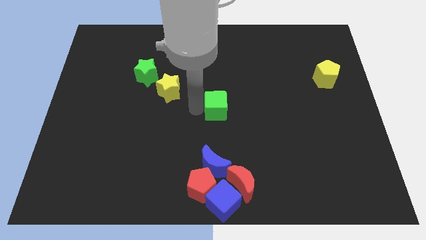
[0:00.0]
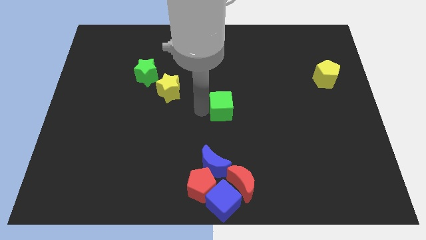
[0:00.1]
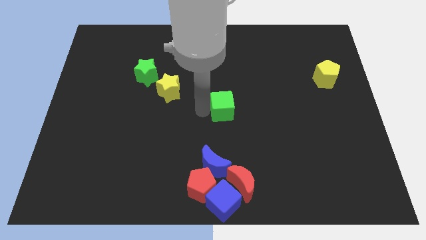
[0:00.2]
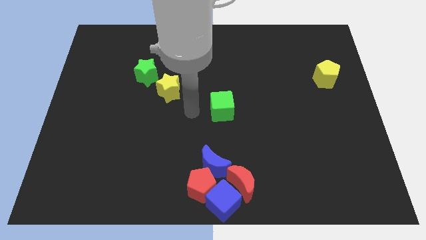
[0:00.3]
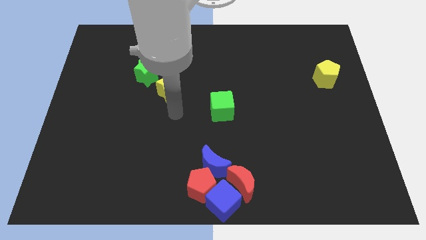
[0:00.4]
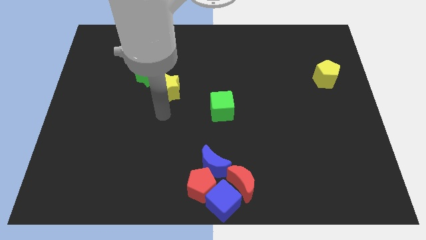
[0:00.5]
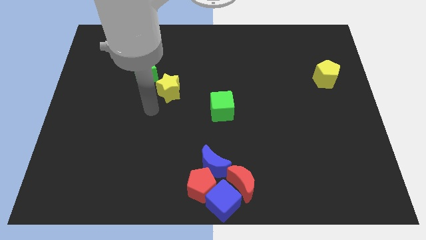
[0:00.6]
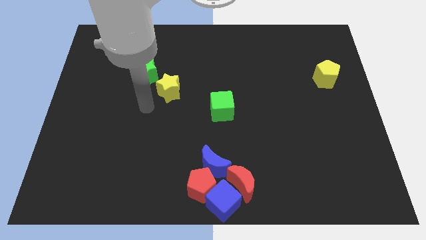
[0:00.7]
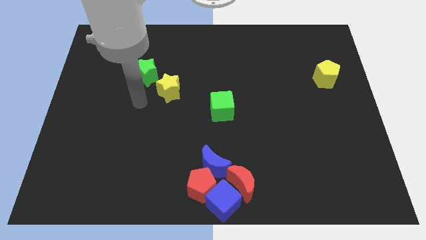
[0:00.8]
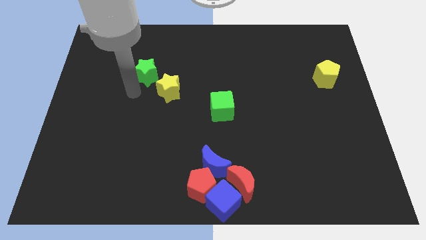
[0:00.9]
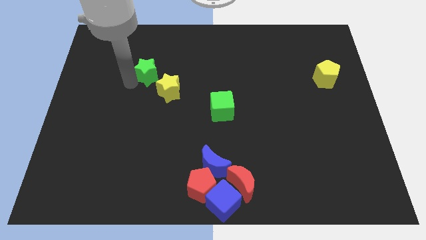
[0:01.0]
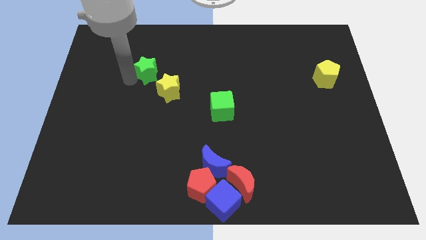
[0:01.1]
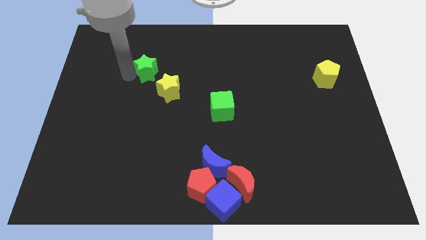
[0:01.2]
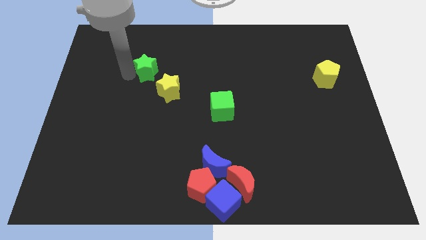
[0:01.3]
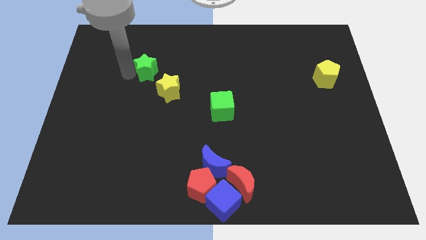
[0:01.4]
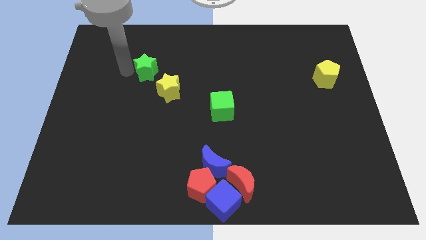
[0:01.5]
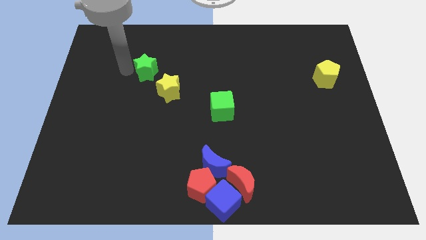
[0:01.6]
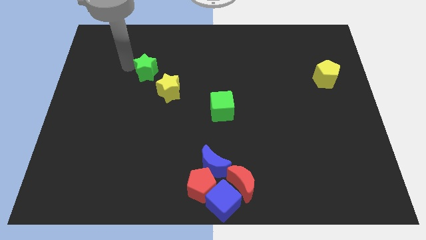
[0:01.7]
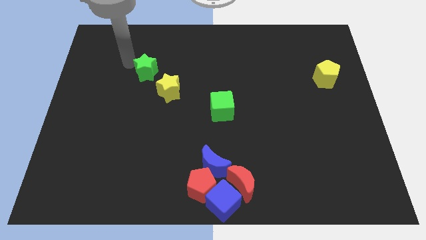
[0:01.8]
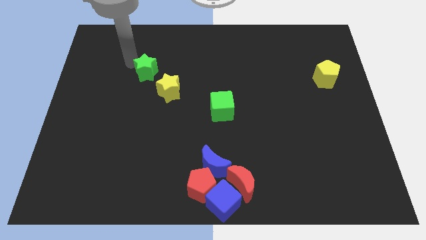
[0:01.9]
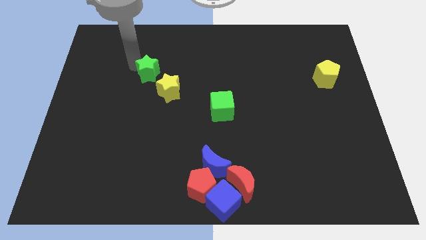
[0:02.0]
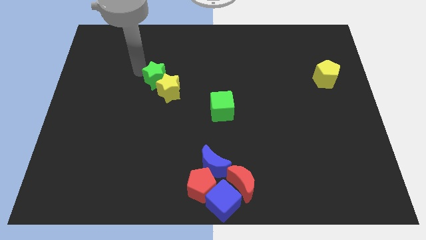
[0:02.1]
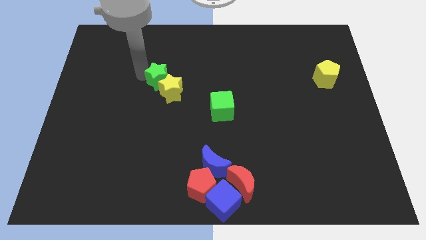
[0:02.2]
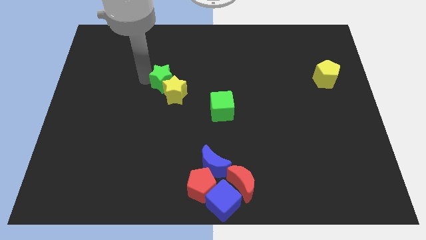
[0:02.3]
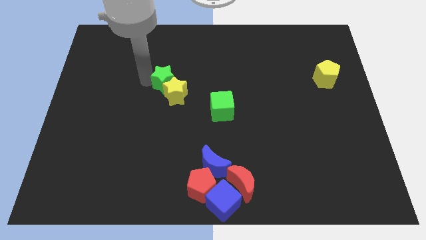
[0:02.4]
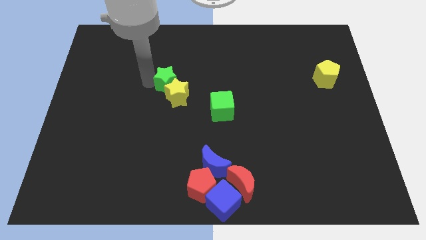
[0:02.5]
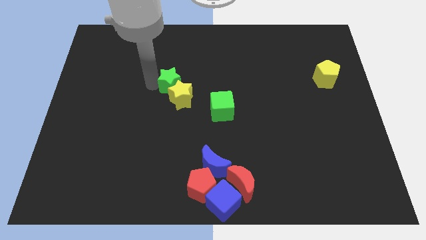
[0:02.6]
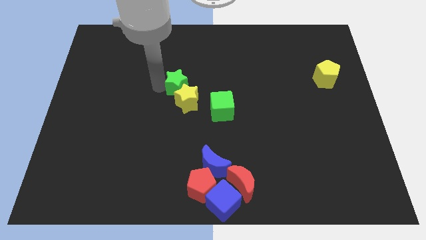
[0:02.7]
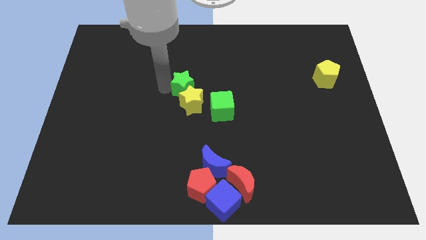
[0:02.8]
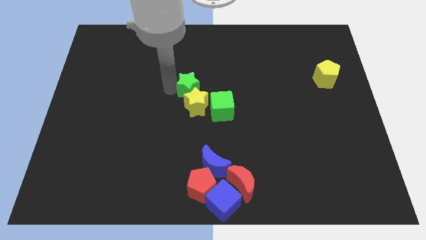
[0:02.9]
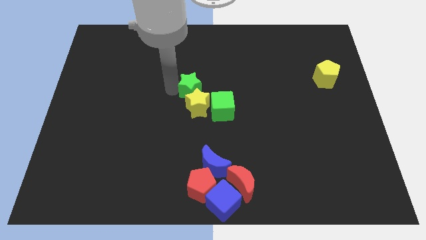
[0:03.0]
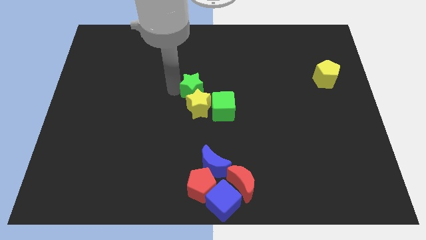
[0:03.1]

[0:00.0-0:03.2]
push the yellow star into green cube

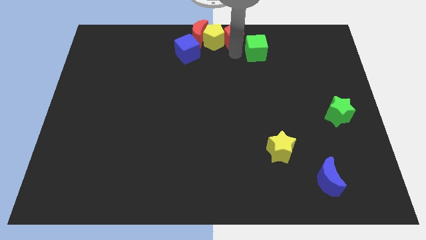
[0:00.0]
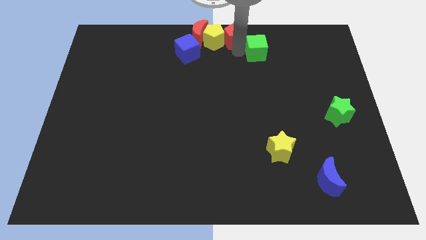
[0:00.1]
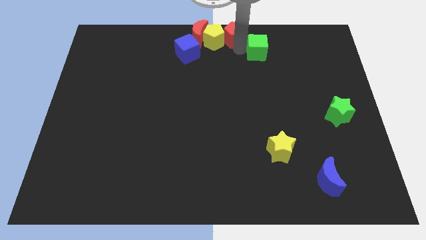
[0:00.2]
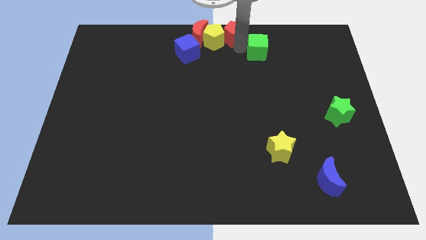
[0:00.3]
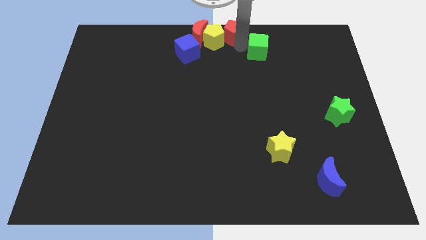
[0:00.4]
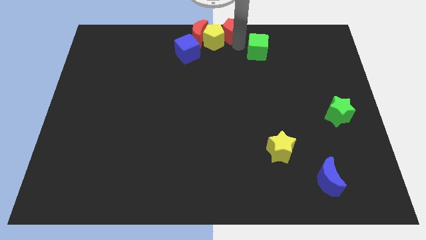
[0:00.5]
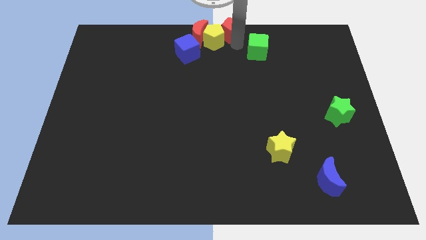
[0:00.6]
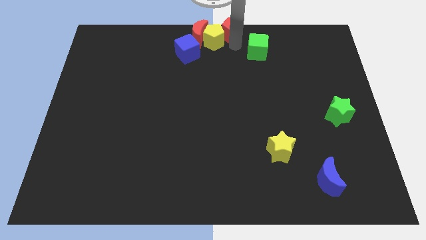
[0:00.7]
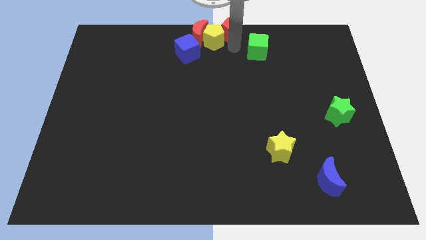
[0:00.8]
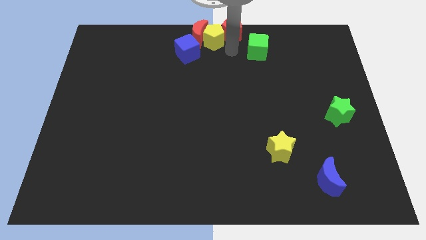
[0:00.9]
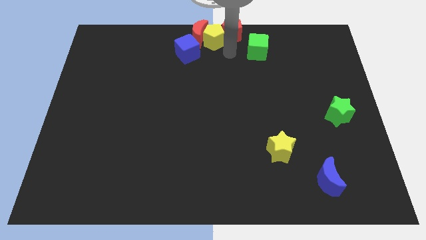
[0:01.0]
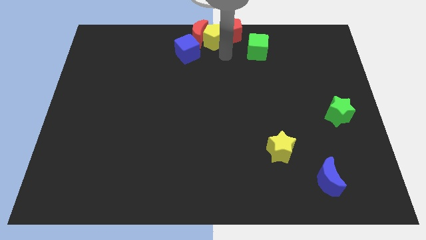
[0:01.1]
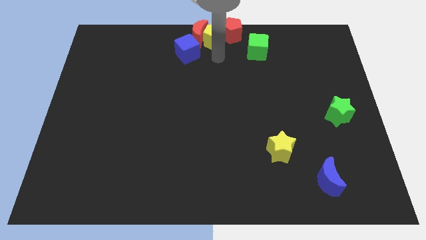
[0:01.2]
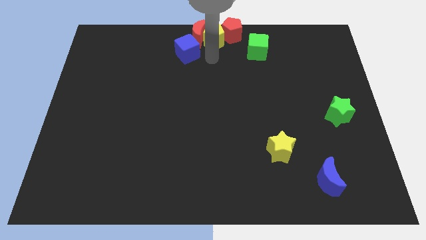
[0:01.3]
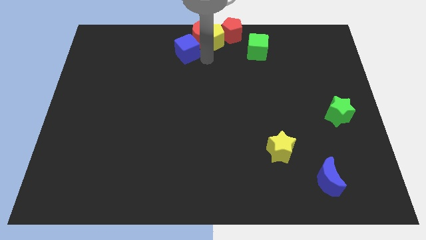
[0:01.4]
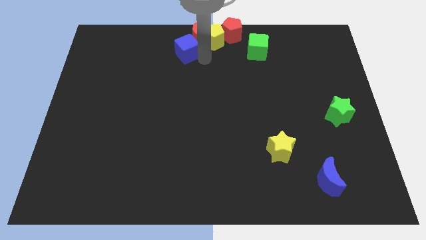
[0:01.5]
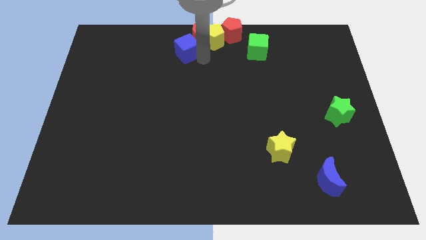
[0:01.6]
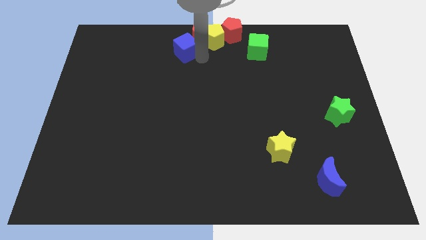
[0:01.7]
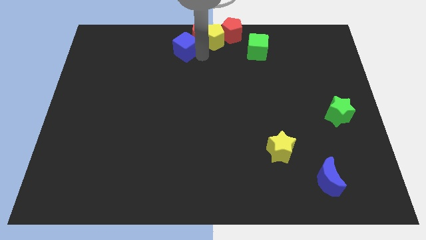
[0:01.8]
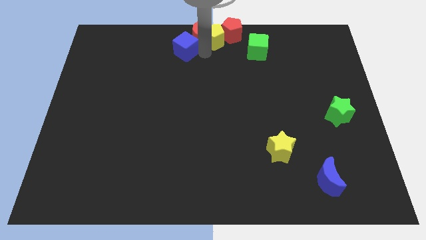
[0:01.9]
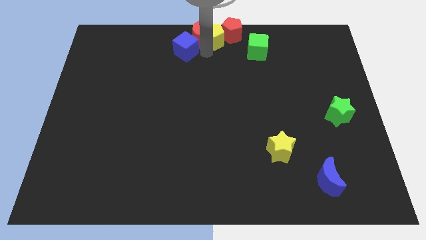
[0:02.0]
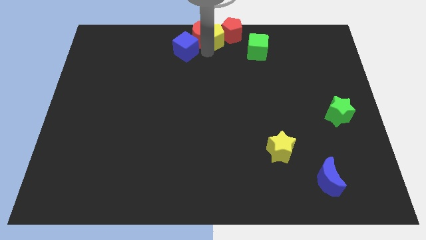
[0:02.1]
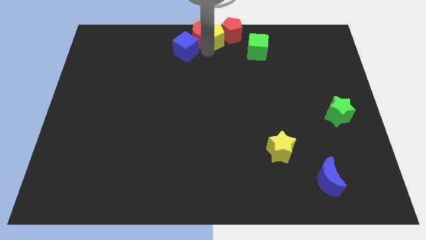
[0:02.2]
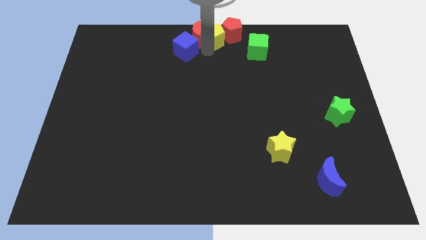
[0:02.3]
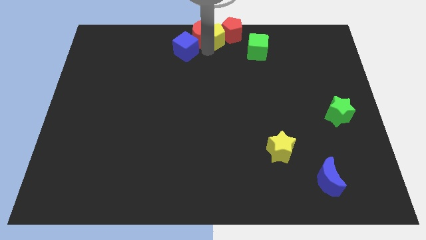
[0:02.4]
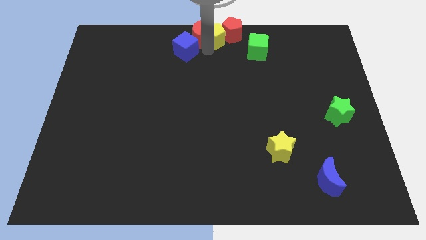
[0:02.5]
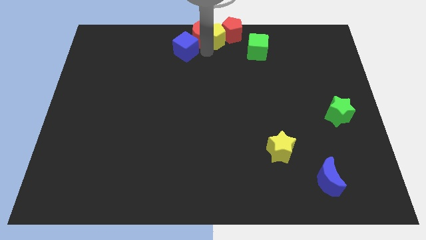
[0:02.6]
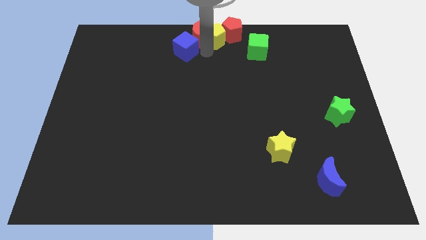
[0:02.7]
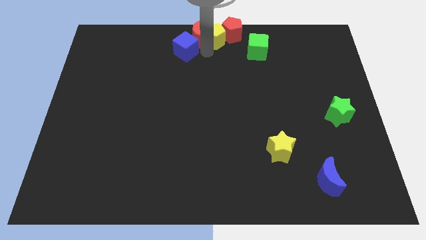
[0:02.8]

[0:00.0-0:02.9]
push the yellow pentagon in between the red crescent and red pentagon at the top center

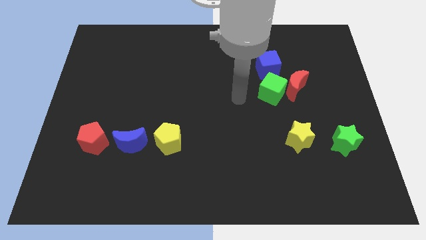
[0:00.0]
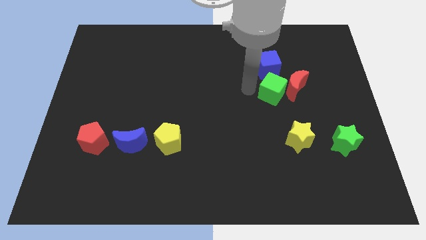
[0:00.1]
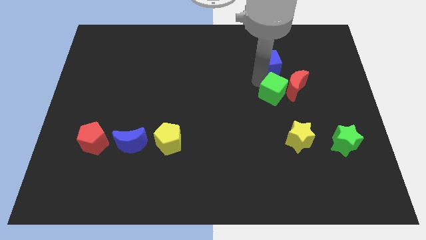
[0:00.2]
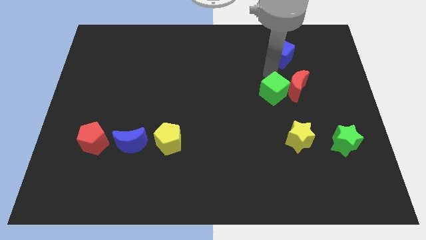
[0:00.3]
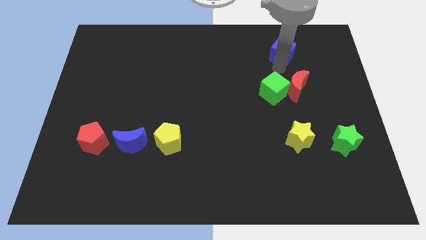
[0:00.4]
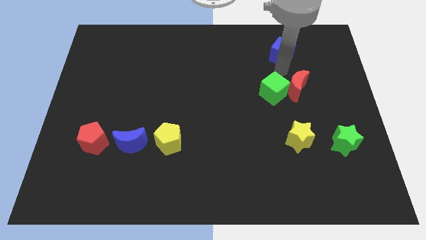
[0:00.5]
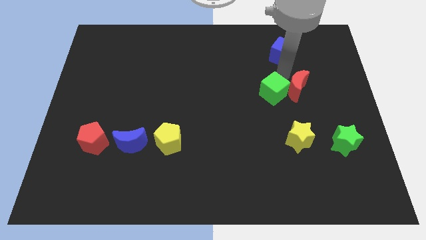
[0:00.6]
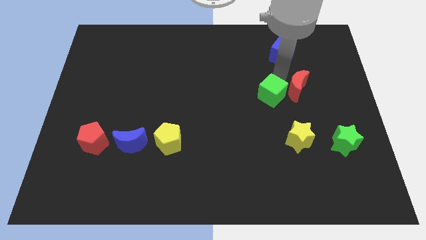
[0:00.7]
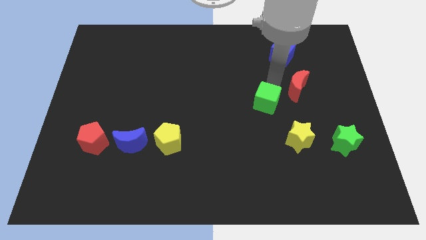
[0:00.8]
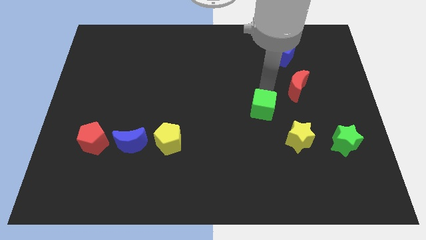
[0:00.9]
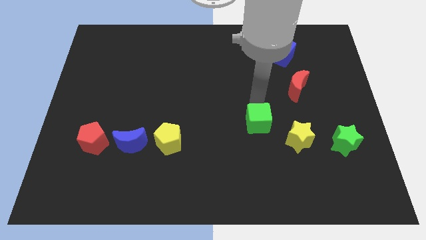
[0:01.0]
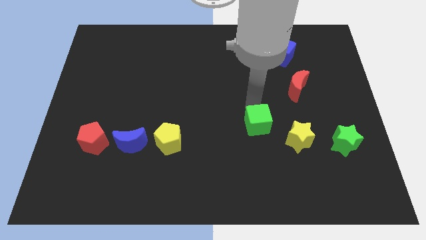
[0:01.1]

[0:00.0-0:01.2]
separate the blue and green cubes

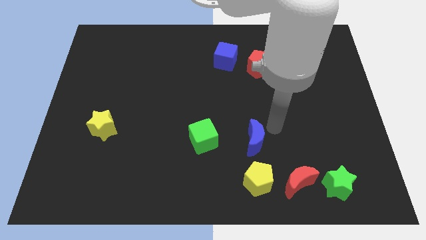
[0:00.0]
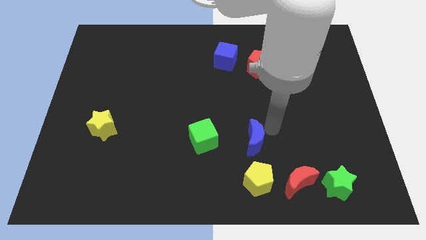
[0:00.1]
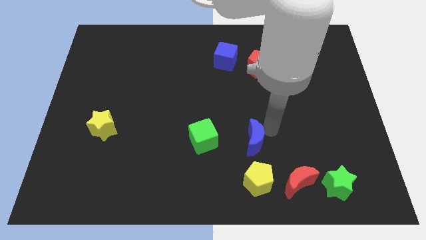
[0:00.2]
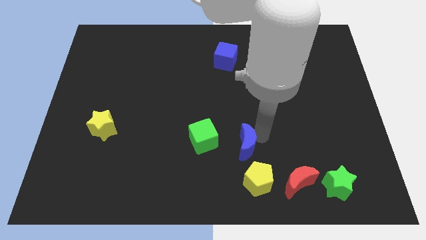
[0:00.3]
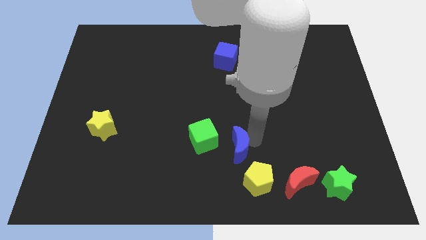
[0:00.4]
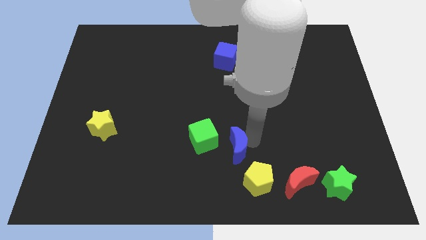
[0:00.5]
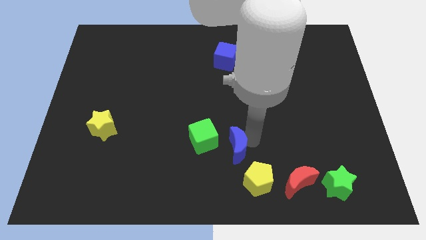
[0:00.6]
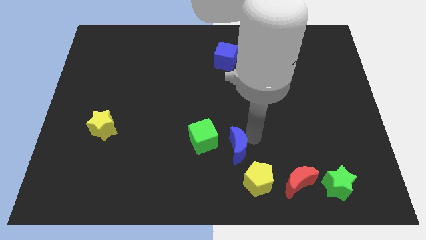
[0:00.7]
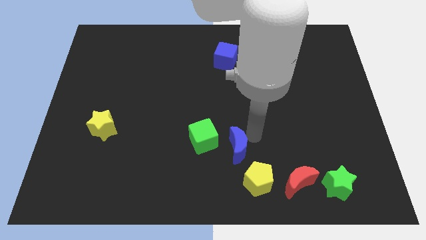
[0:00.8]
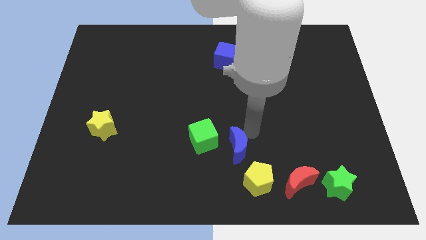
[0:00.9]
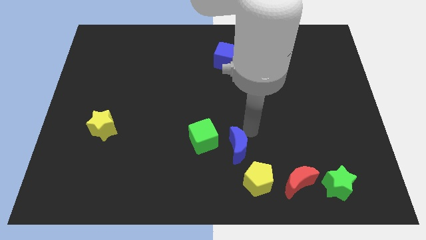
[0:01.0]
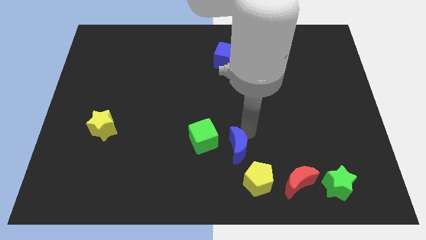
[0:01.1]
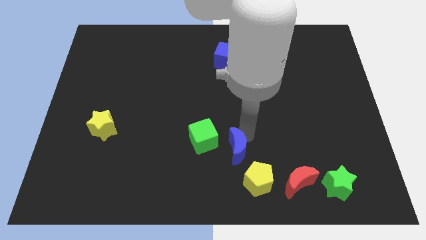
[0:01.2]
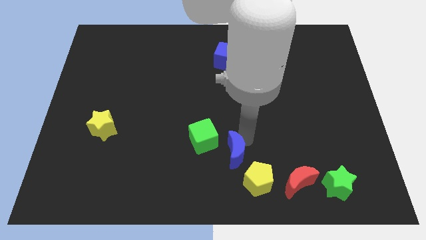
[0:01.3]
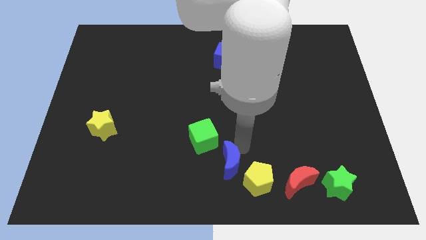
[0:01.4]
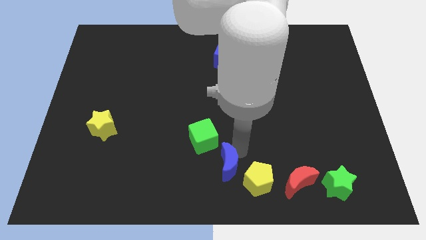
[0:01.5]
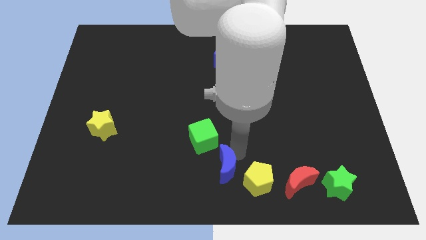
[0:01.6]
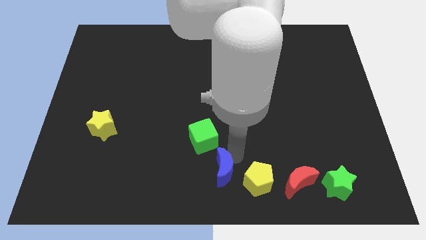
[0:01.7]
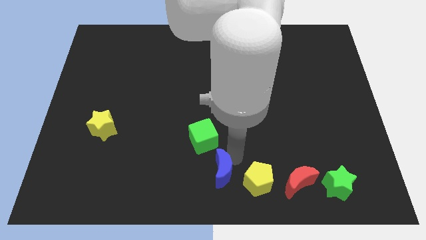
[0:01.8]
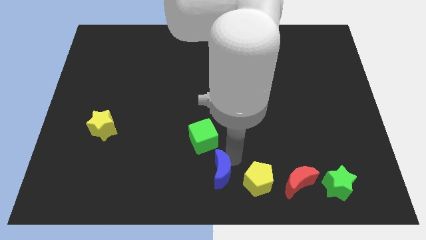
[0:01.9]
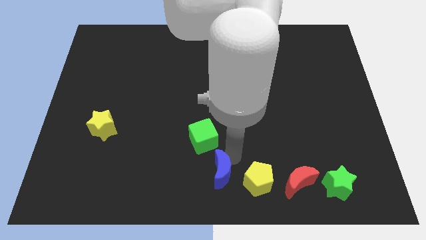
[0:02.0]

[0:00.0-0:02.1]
push the blue moon to the left of yellow pentagon
